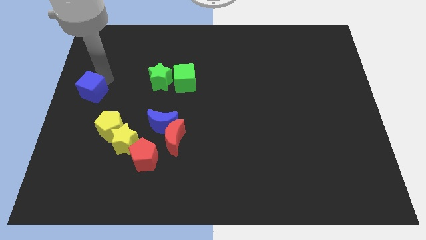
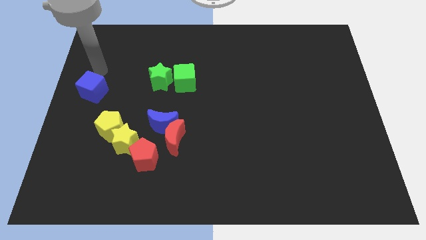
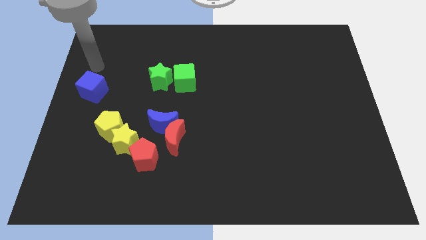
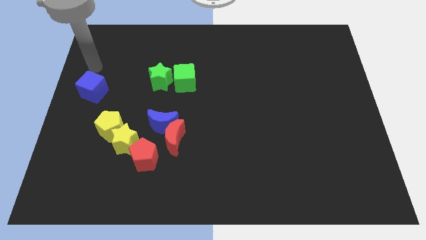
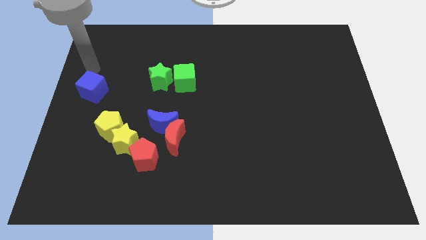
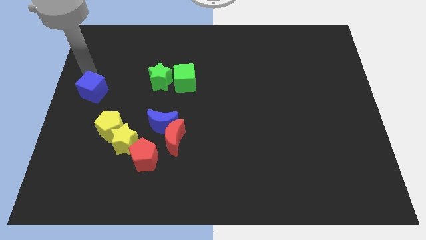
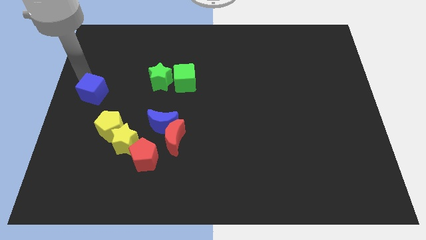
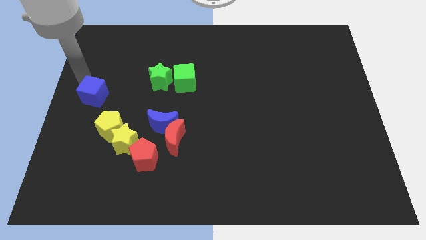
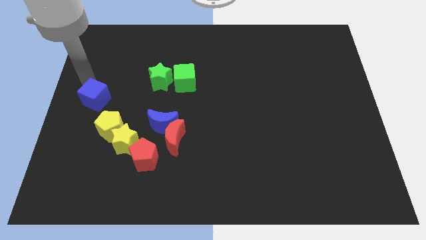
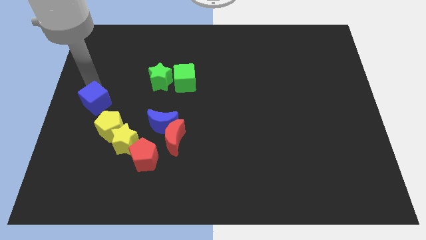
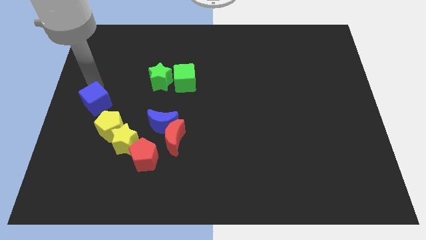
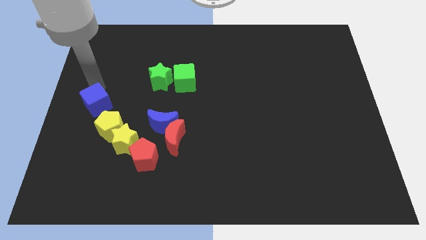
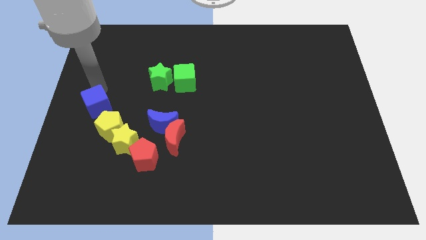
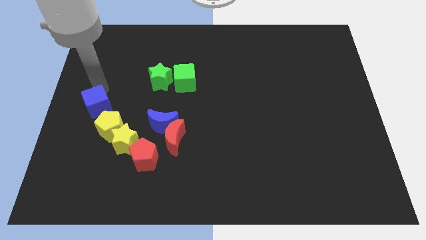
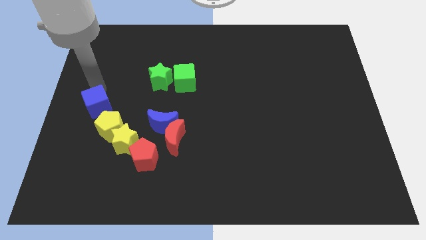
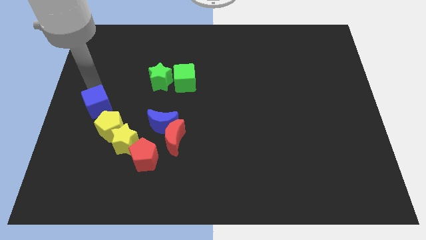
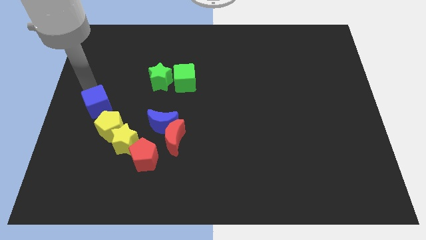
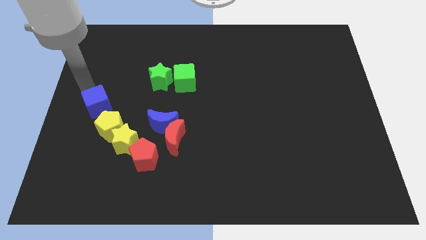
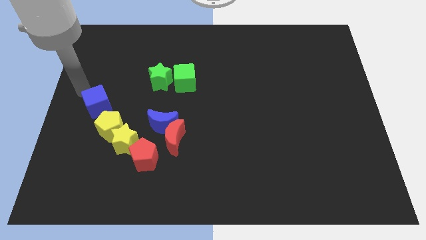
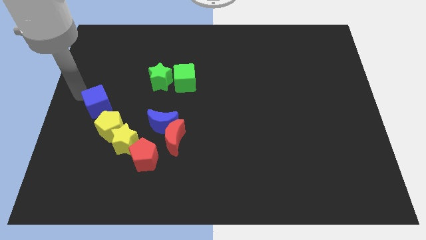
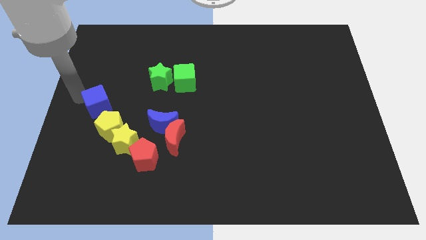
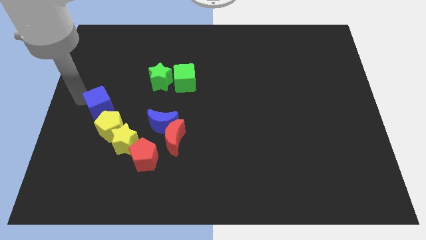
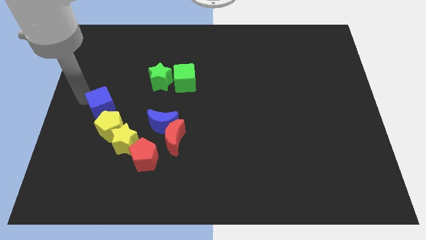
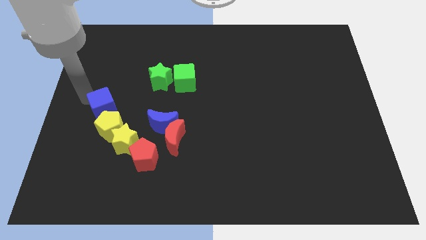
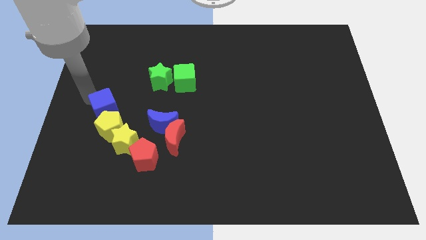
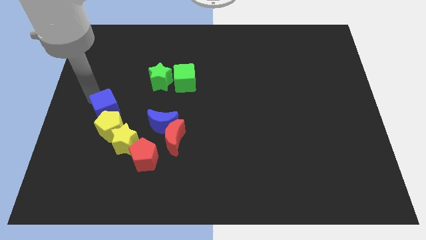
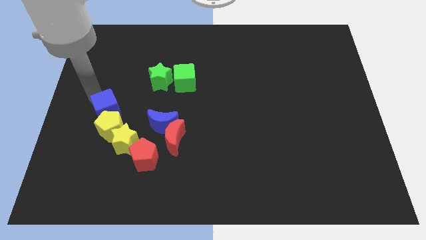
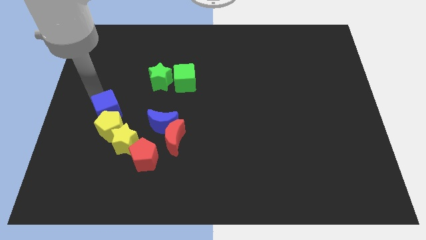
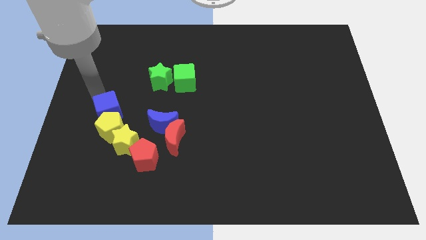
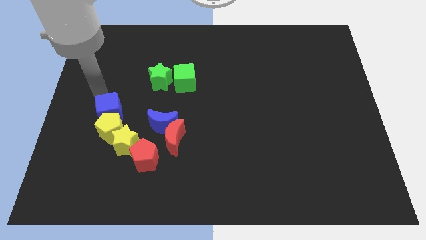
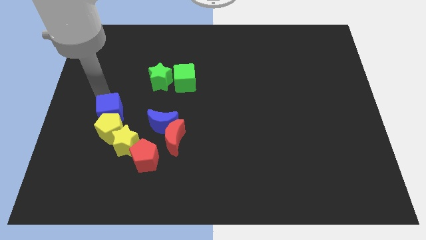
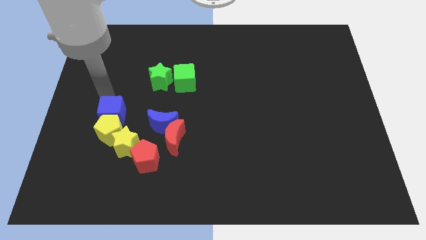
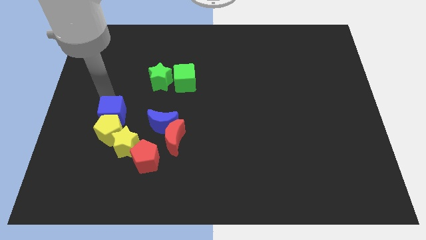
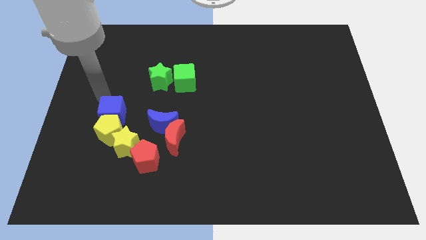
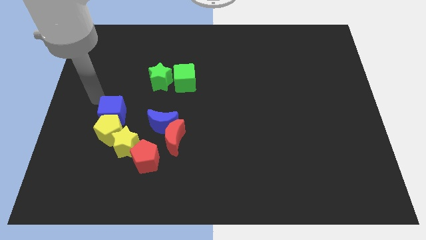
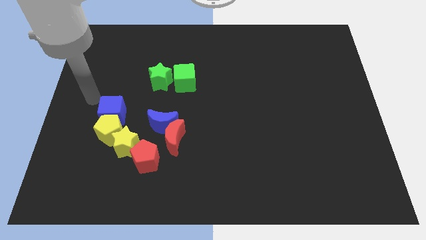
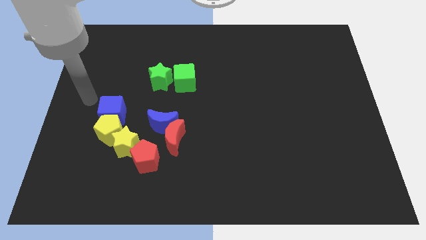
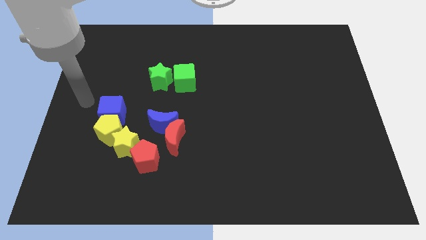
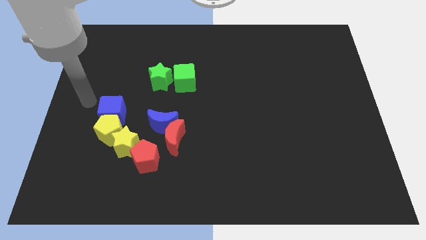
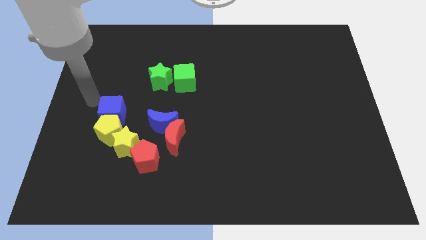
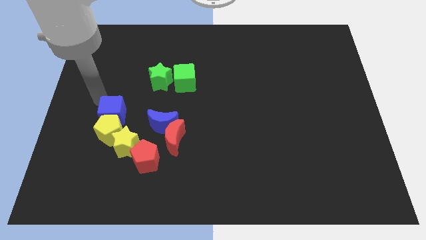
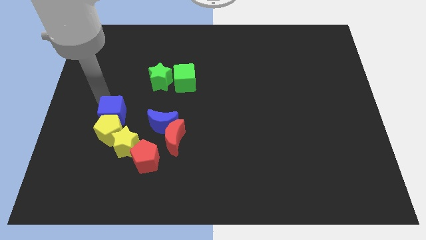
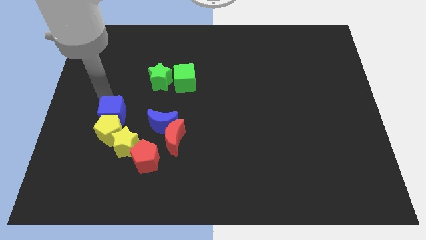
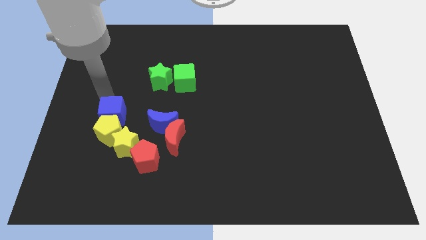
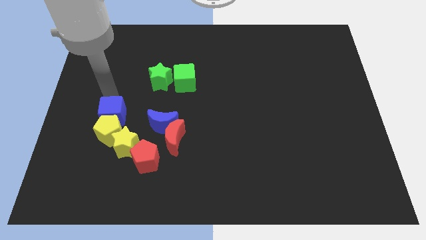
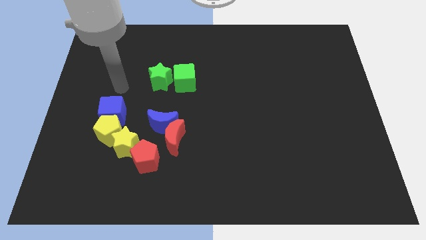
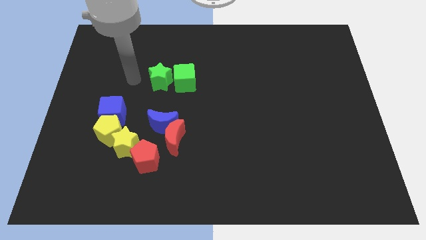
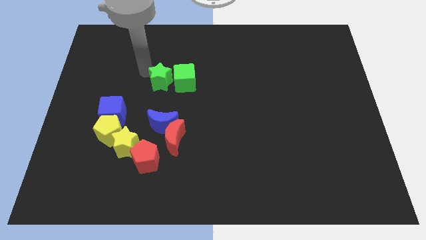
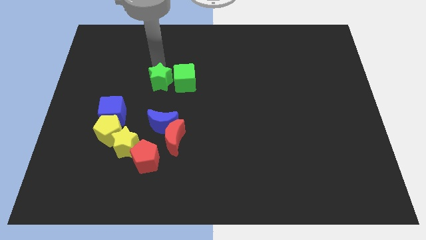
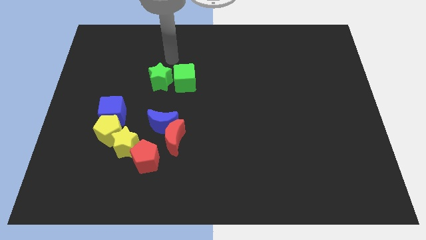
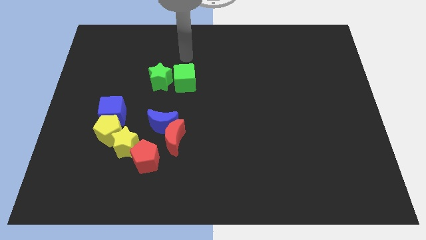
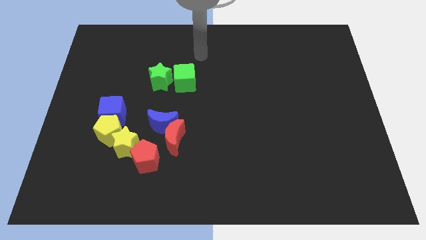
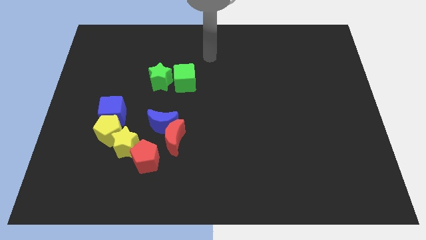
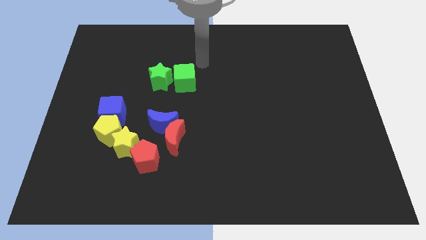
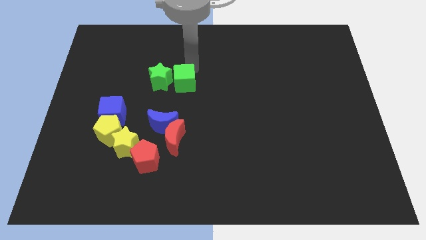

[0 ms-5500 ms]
push the blue cube into yellow blocks

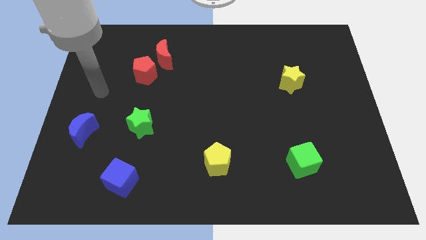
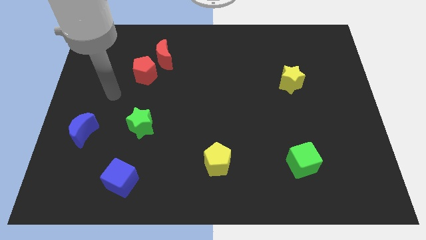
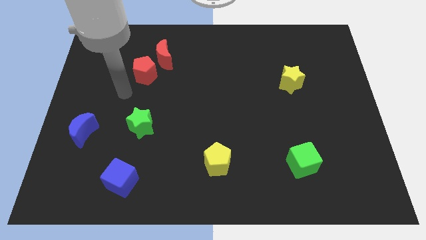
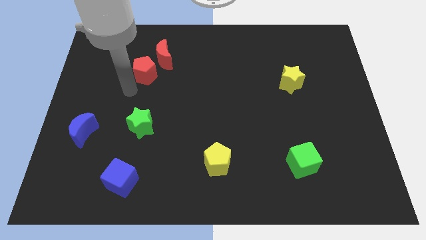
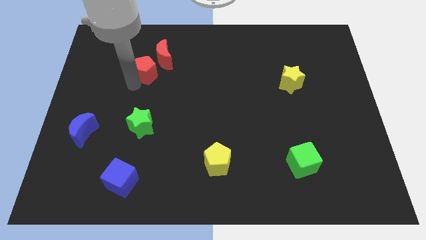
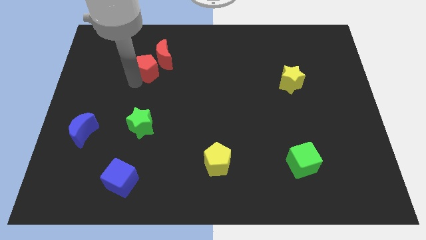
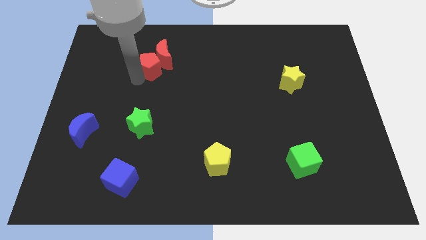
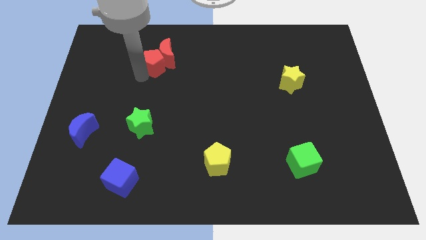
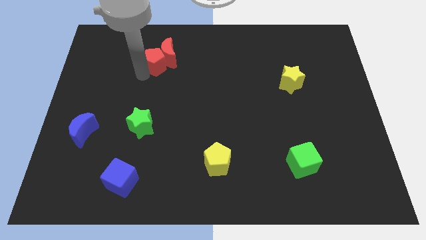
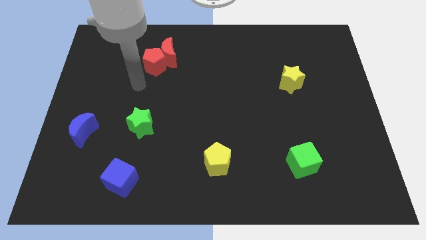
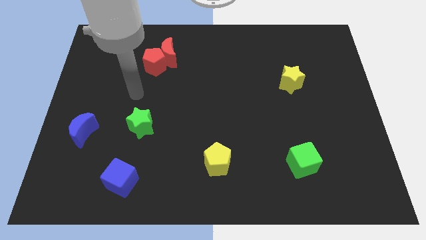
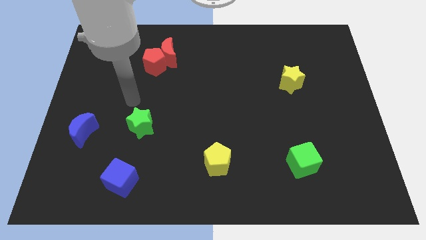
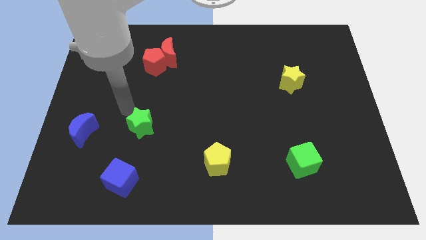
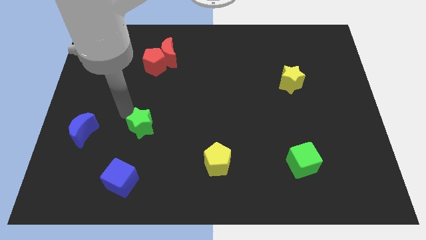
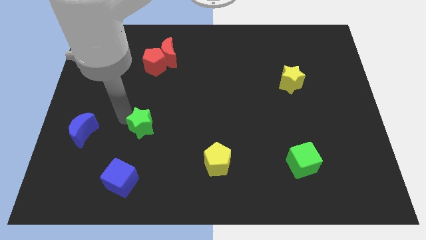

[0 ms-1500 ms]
push red pentagon into the red crescent

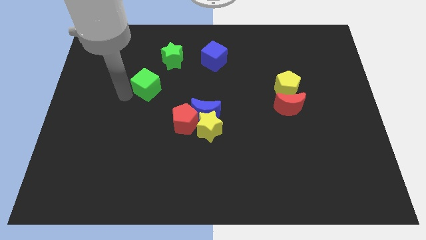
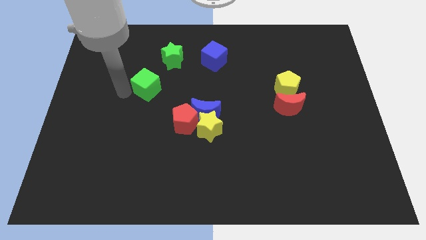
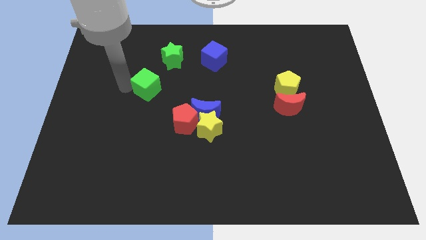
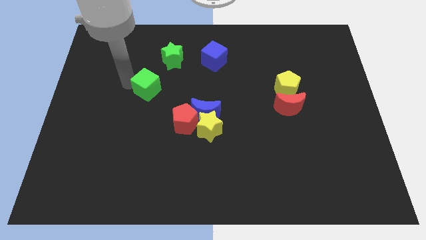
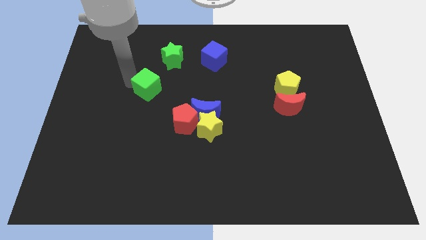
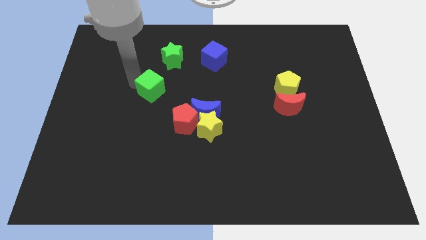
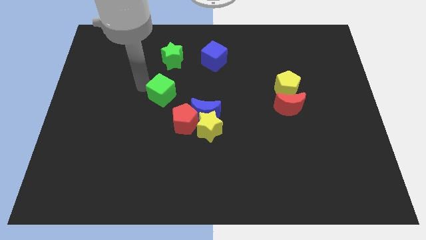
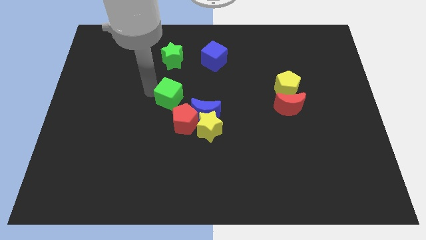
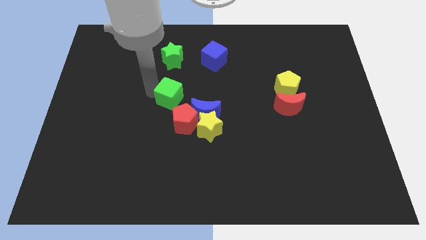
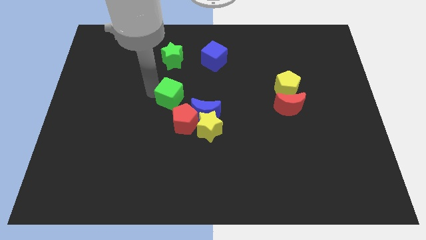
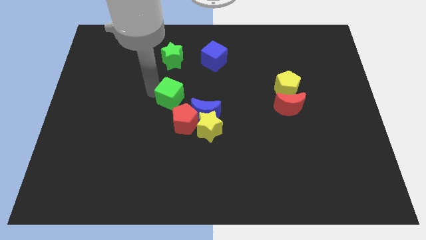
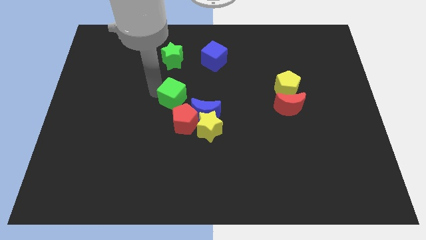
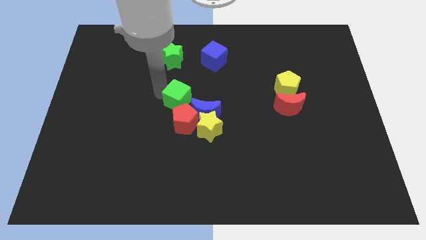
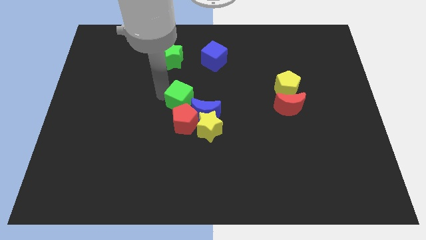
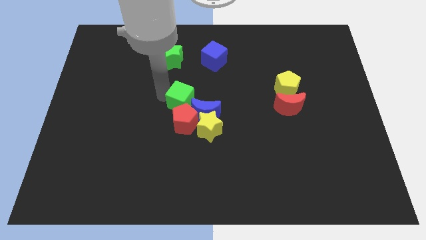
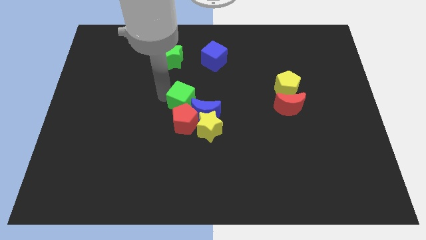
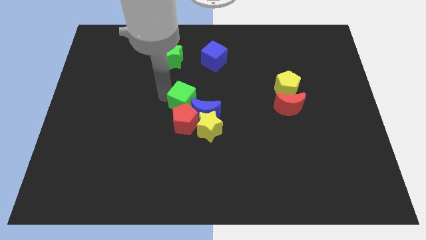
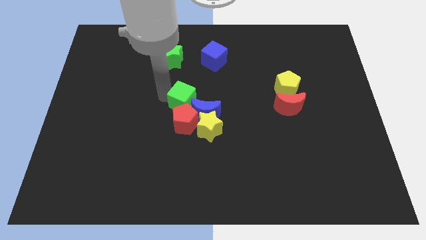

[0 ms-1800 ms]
place the green cube above the red pentagon
